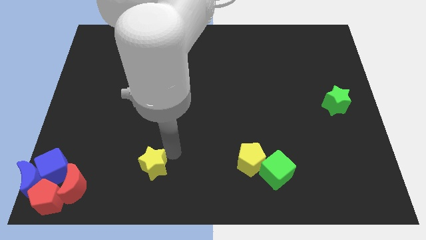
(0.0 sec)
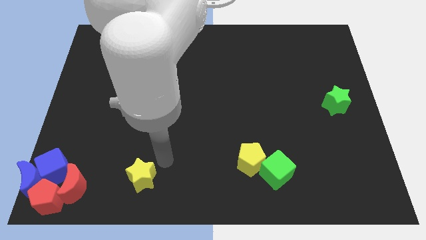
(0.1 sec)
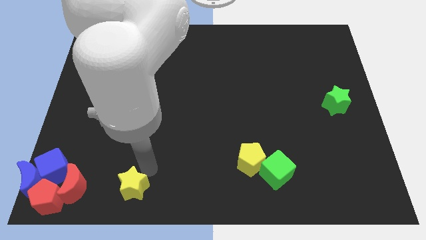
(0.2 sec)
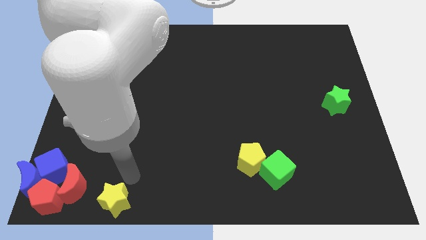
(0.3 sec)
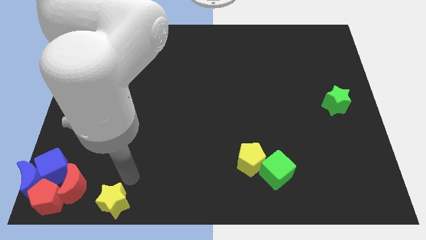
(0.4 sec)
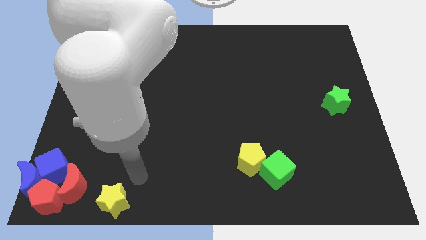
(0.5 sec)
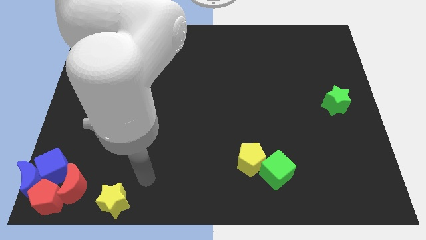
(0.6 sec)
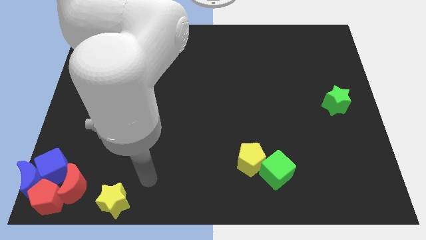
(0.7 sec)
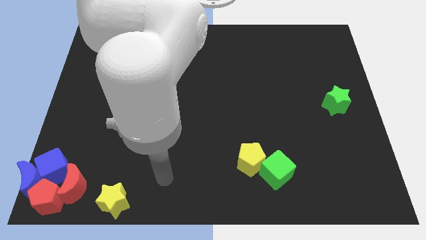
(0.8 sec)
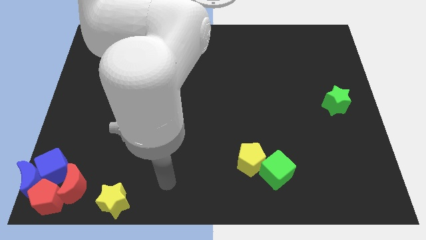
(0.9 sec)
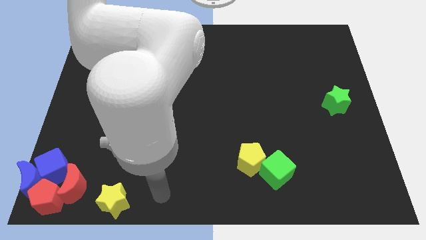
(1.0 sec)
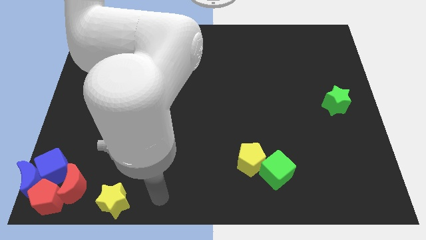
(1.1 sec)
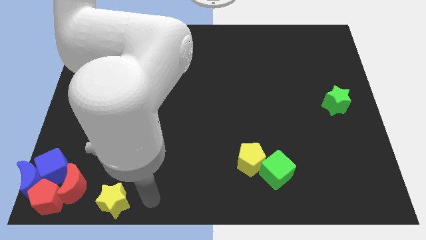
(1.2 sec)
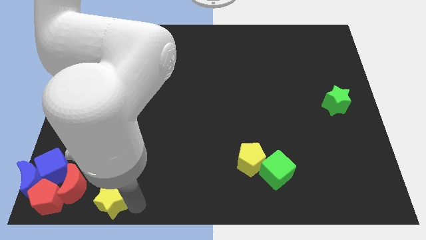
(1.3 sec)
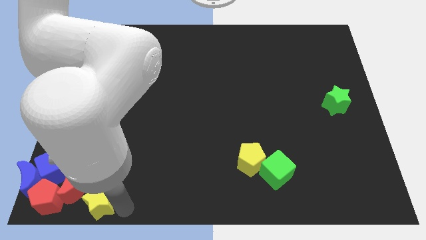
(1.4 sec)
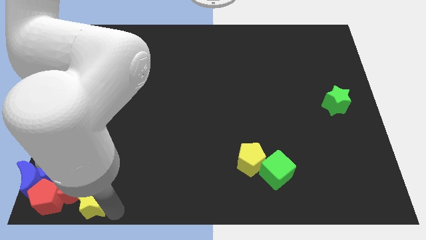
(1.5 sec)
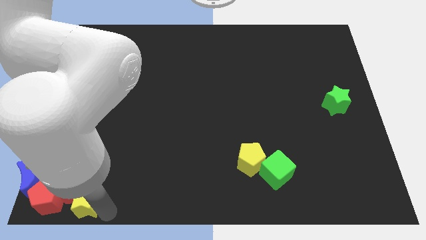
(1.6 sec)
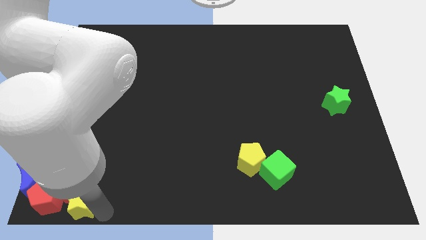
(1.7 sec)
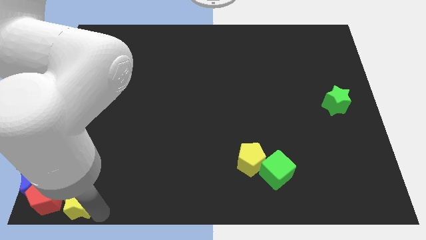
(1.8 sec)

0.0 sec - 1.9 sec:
push the yellow star into the red crescent and red pentagon

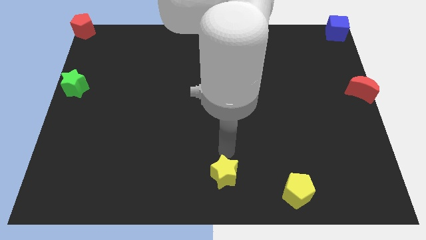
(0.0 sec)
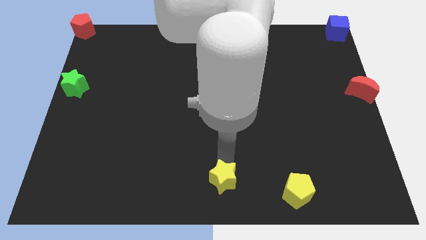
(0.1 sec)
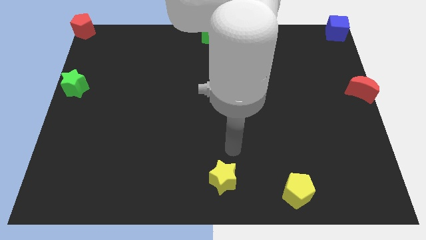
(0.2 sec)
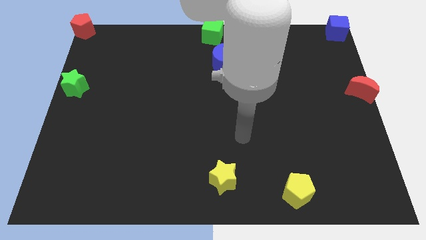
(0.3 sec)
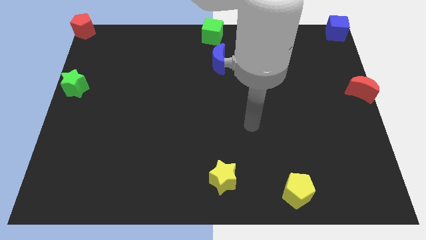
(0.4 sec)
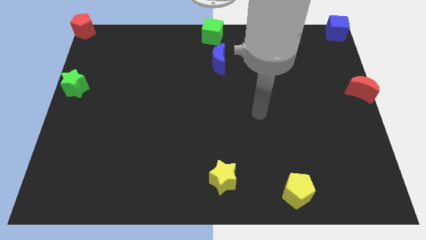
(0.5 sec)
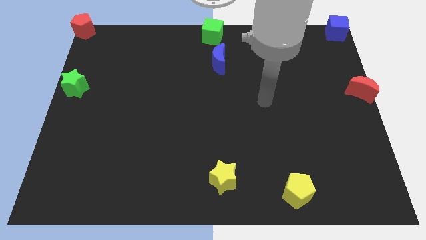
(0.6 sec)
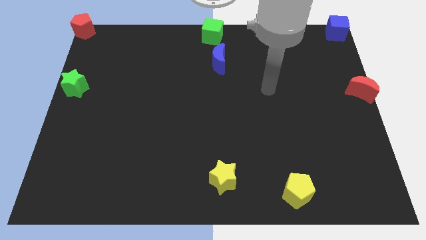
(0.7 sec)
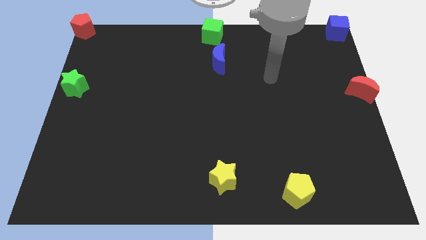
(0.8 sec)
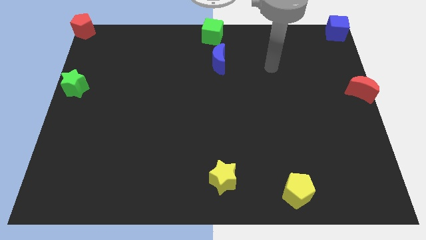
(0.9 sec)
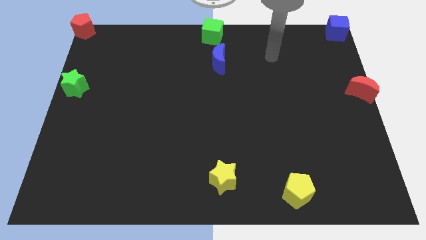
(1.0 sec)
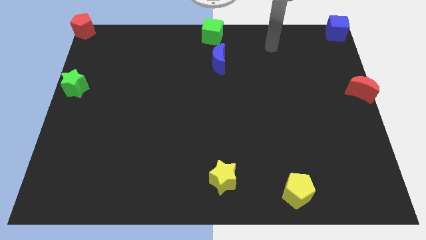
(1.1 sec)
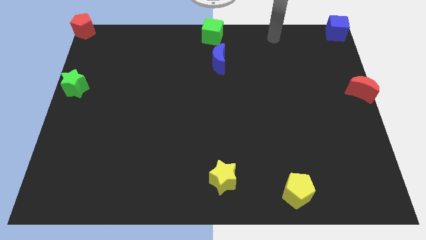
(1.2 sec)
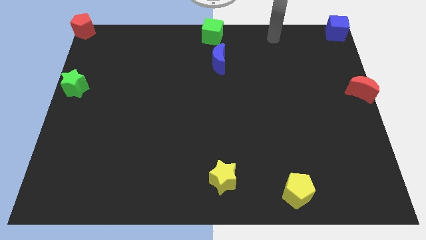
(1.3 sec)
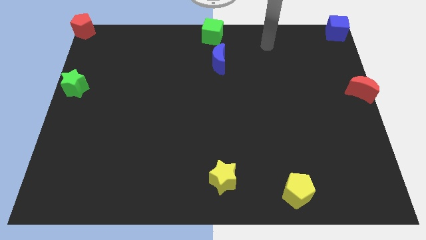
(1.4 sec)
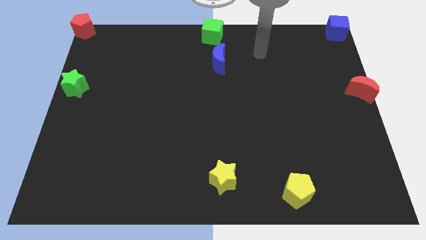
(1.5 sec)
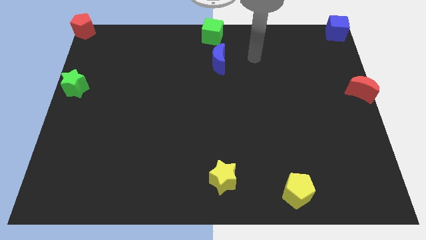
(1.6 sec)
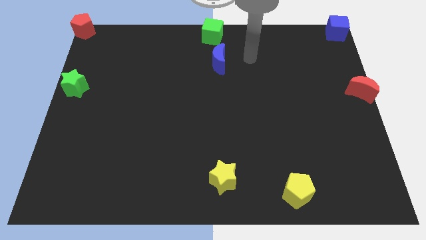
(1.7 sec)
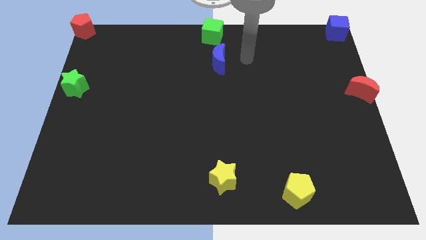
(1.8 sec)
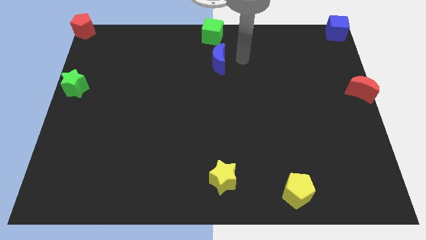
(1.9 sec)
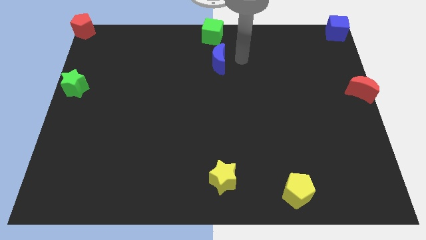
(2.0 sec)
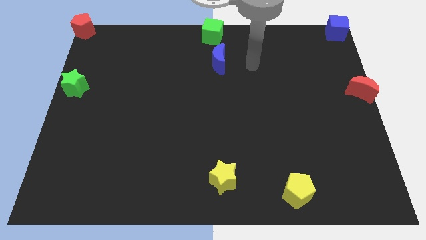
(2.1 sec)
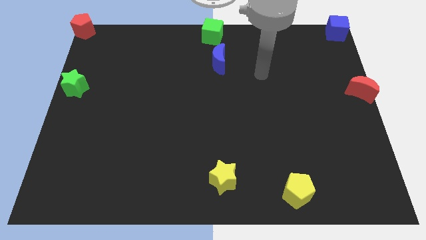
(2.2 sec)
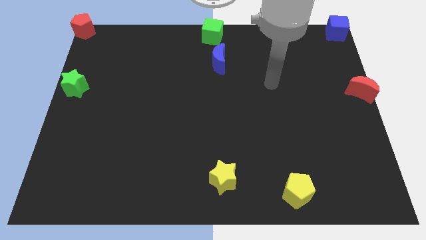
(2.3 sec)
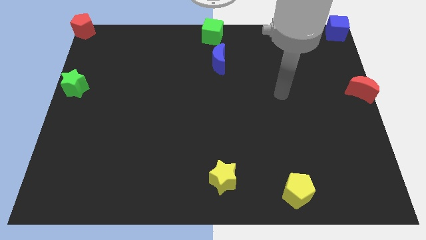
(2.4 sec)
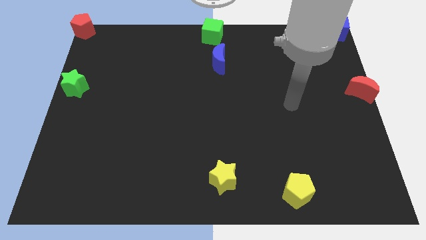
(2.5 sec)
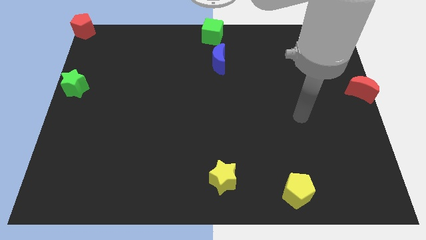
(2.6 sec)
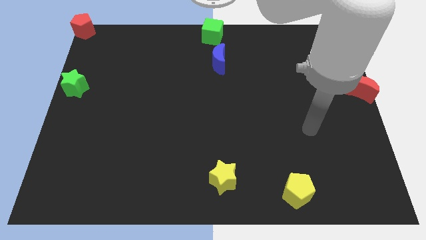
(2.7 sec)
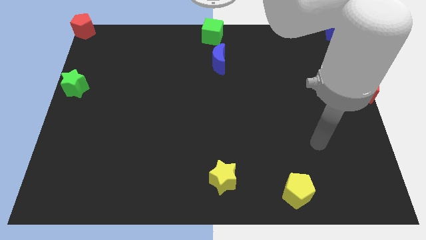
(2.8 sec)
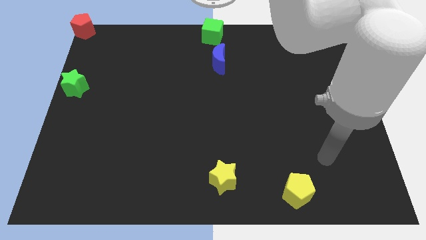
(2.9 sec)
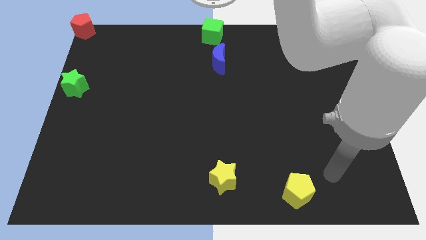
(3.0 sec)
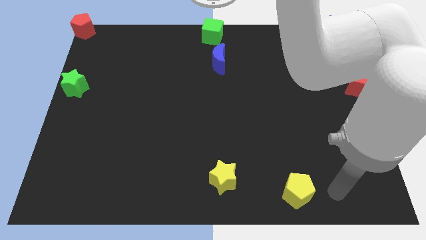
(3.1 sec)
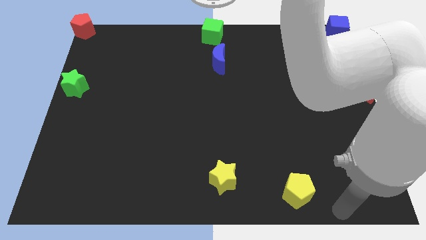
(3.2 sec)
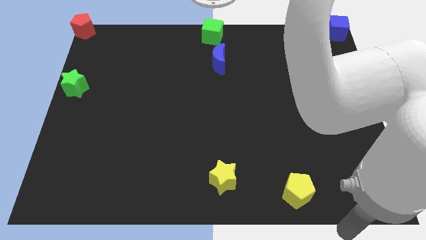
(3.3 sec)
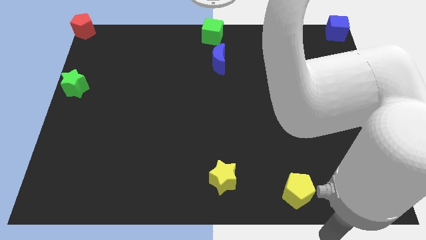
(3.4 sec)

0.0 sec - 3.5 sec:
move your arm right to the yellow pentagon

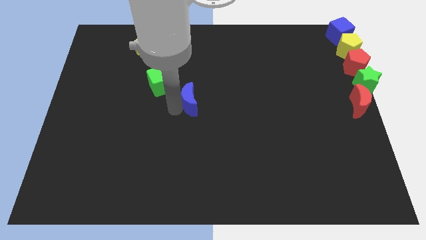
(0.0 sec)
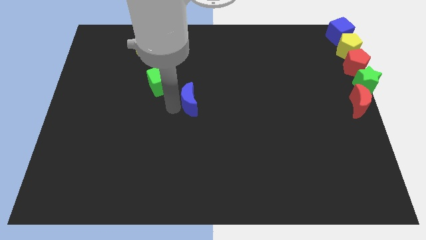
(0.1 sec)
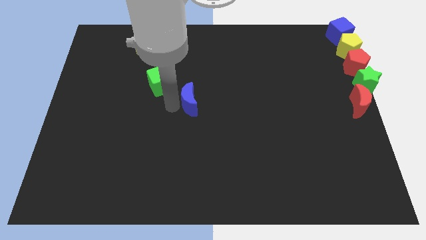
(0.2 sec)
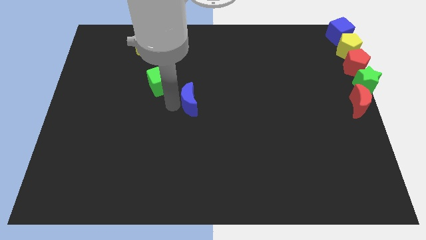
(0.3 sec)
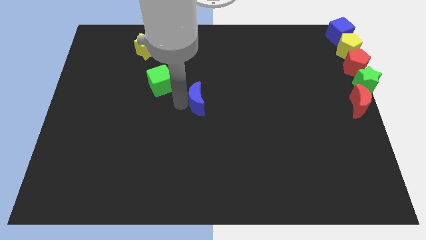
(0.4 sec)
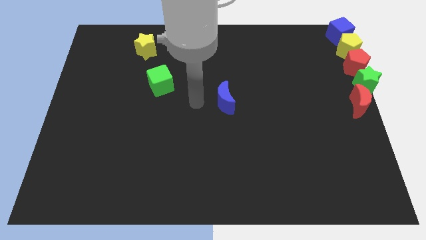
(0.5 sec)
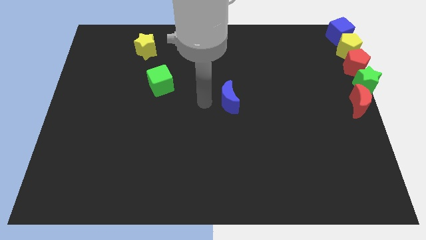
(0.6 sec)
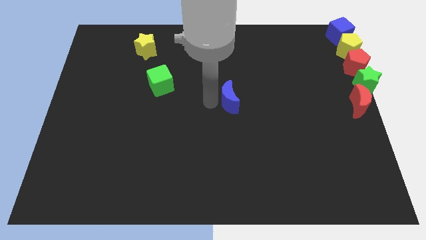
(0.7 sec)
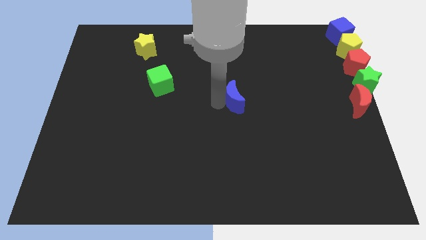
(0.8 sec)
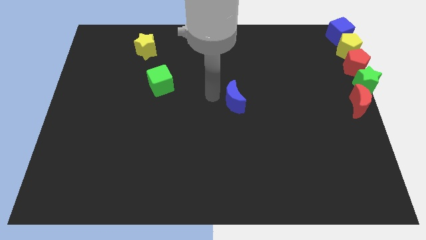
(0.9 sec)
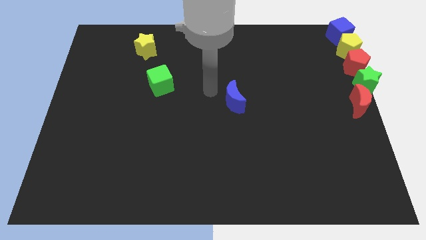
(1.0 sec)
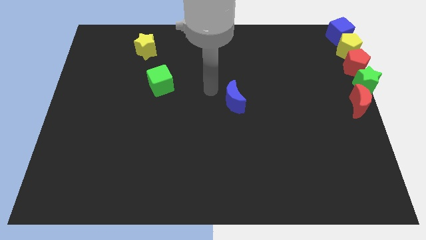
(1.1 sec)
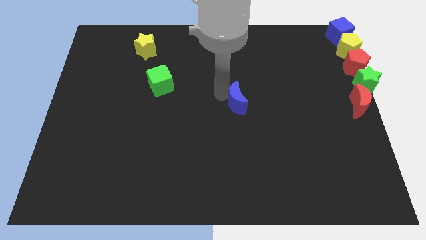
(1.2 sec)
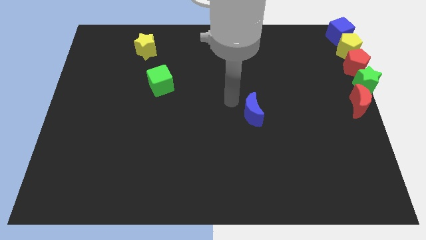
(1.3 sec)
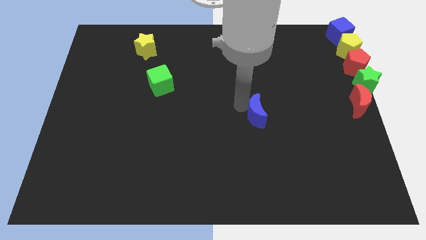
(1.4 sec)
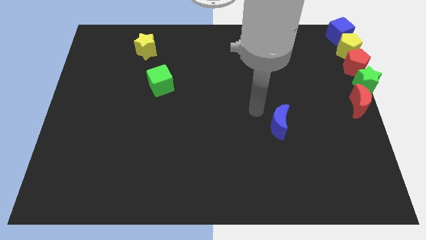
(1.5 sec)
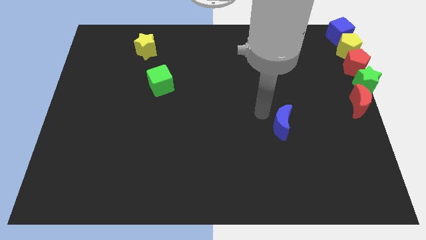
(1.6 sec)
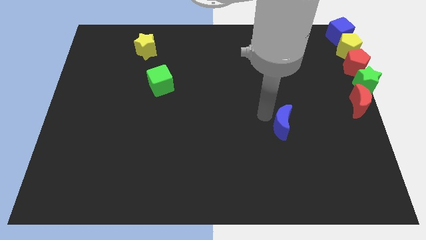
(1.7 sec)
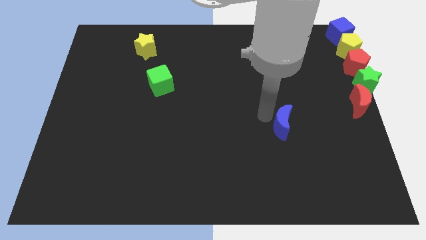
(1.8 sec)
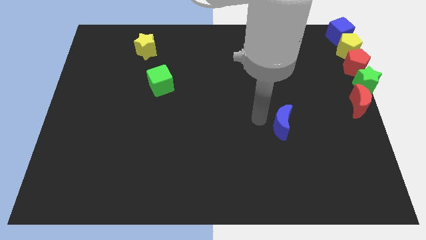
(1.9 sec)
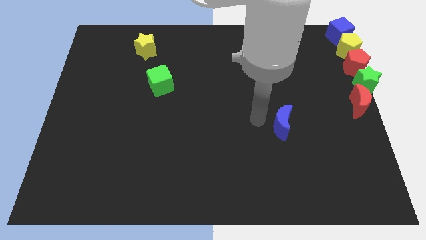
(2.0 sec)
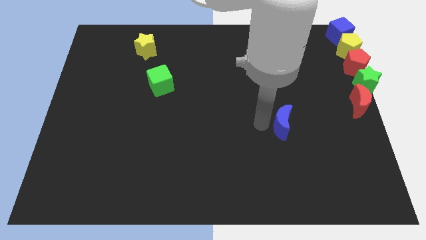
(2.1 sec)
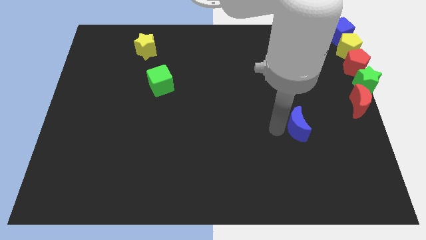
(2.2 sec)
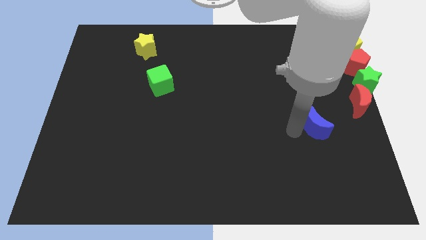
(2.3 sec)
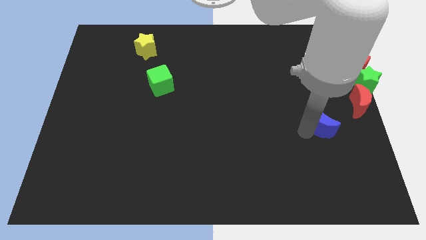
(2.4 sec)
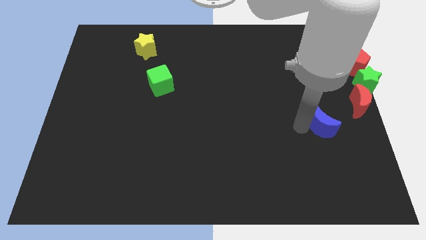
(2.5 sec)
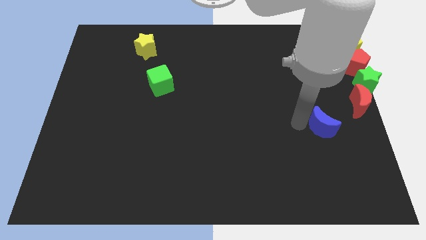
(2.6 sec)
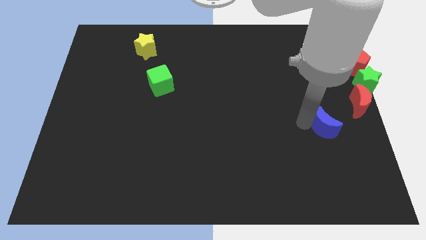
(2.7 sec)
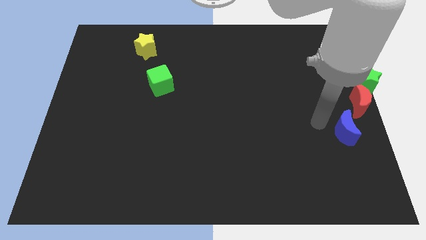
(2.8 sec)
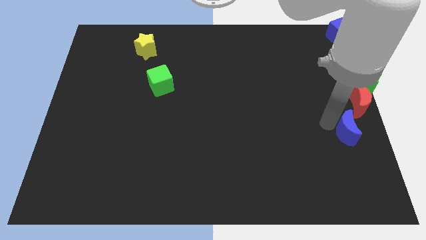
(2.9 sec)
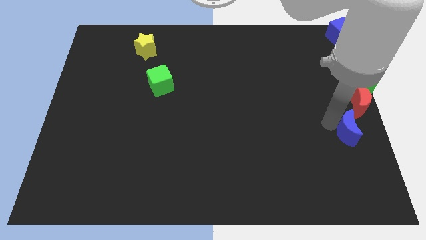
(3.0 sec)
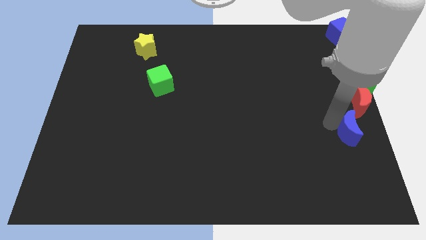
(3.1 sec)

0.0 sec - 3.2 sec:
move the blue crescent towards the red crescent

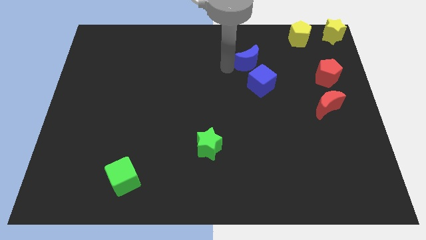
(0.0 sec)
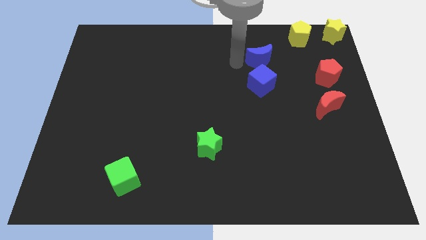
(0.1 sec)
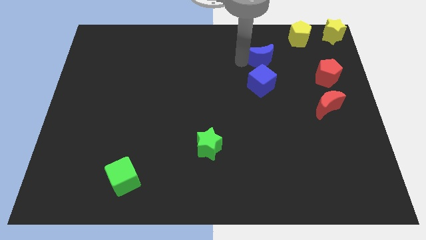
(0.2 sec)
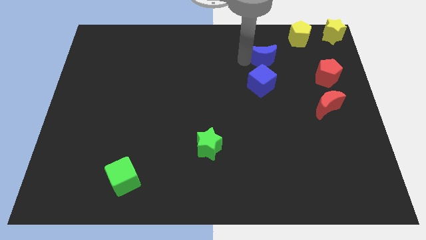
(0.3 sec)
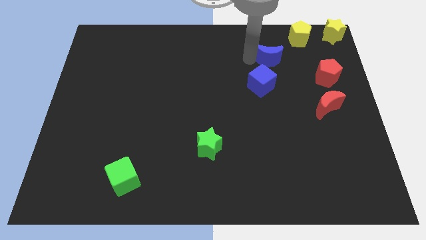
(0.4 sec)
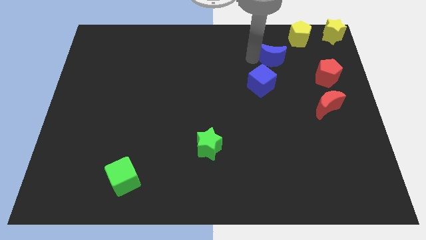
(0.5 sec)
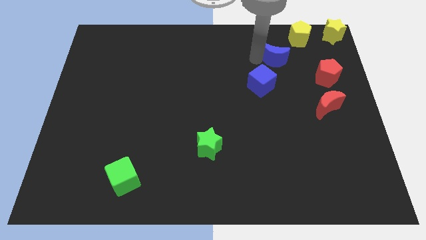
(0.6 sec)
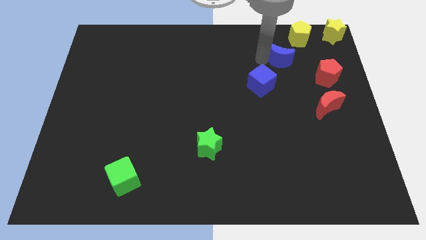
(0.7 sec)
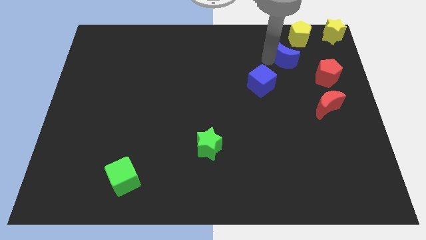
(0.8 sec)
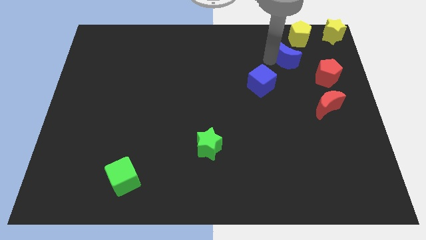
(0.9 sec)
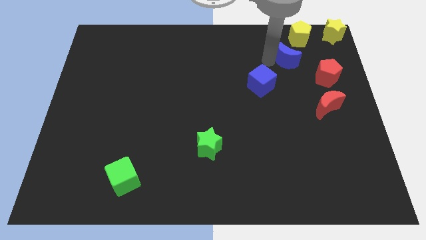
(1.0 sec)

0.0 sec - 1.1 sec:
place the blue crescent diagonally in between the yellow pentagon and the blue cube
